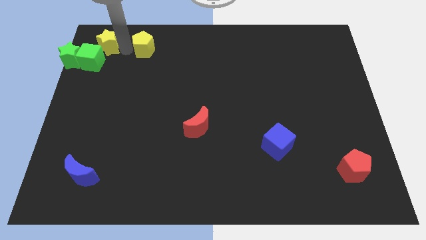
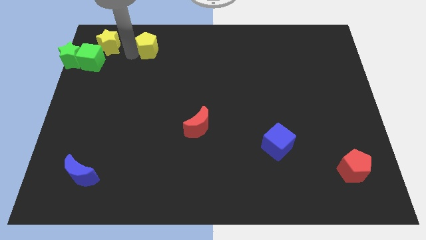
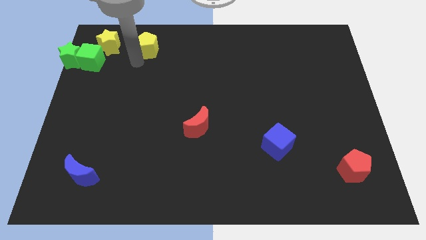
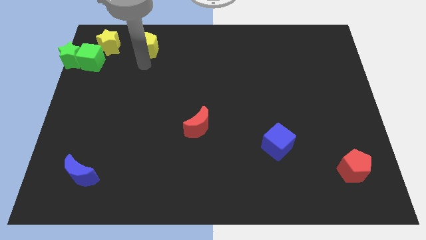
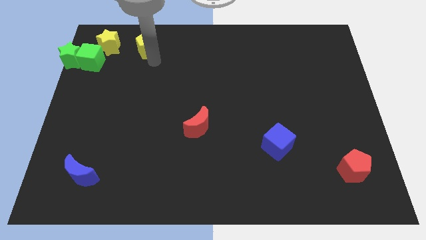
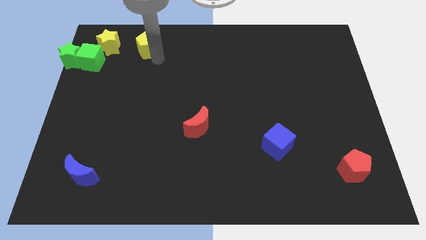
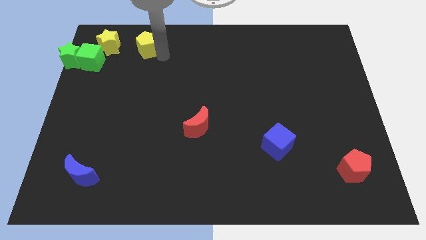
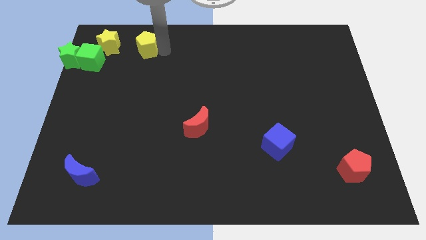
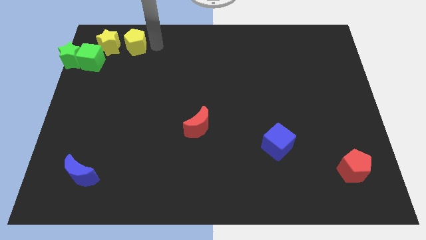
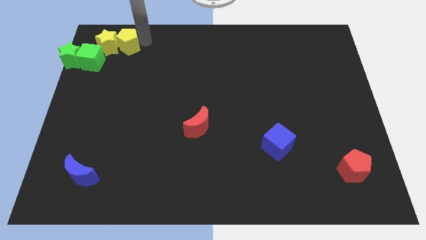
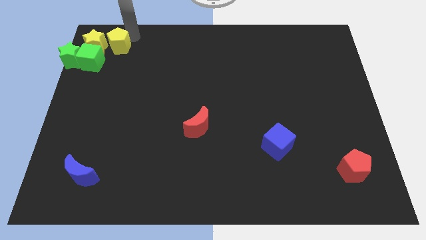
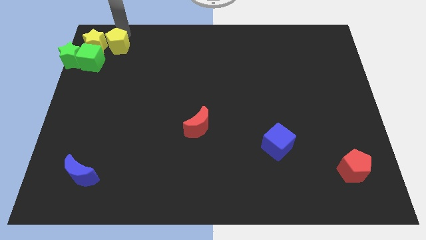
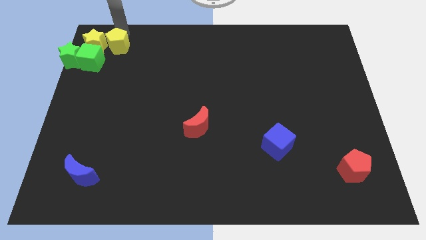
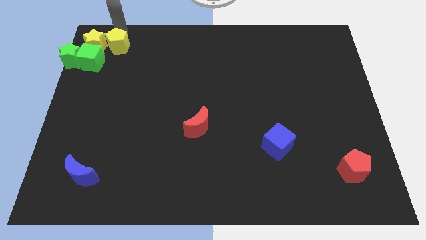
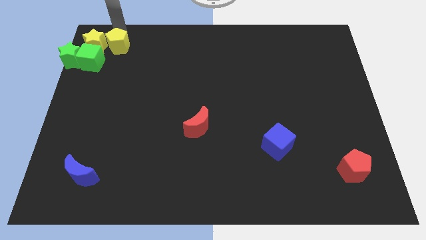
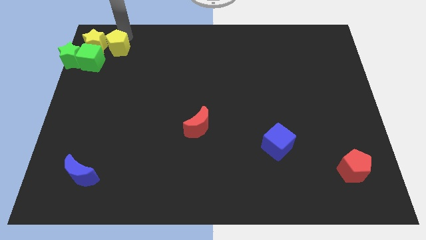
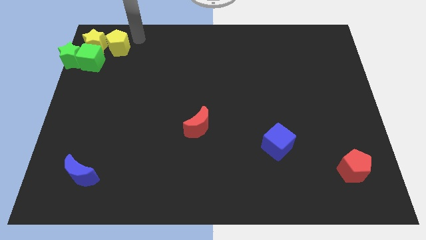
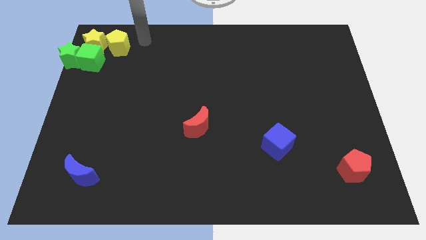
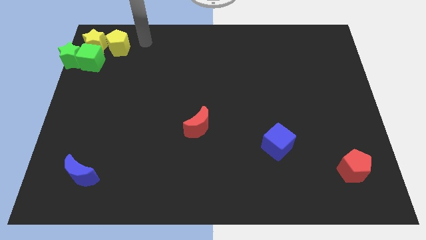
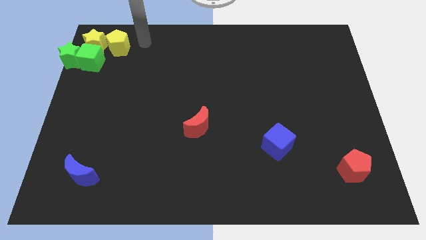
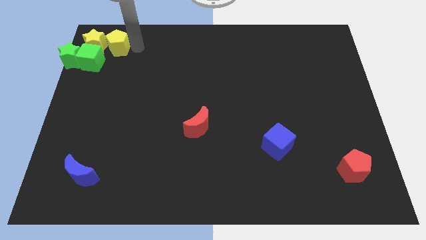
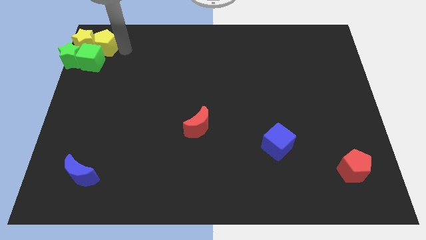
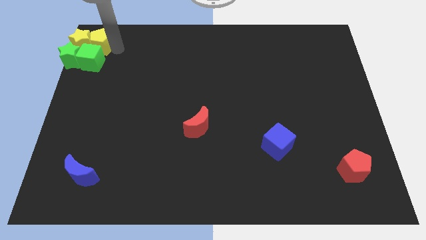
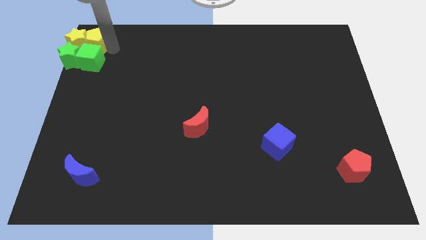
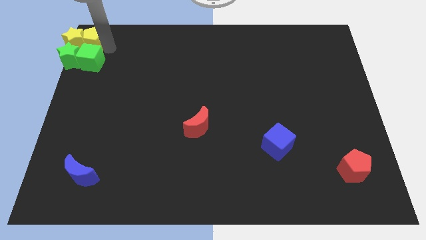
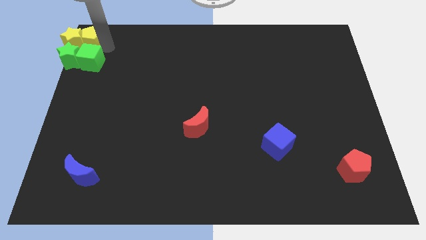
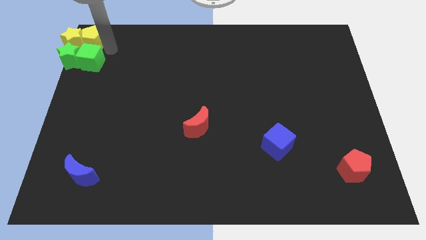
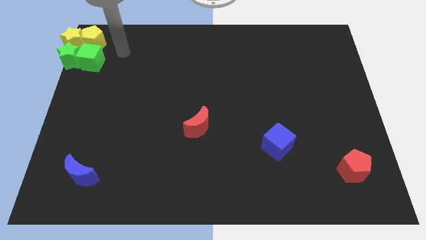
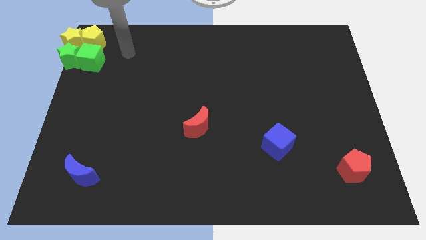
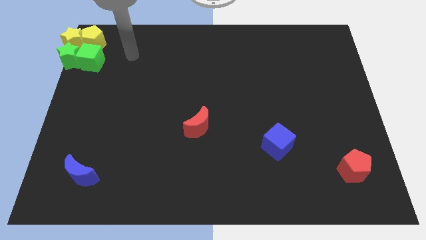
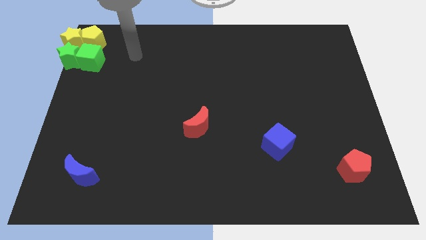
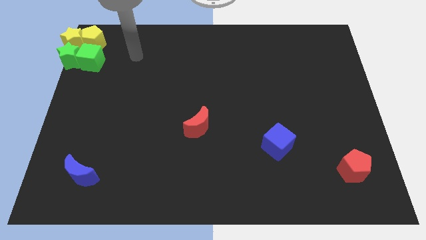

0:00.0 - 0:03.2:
slide the yellow pentagon into the yellow star

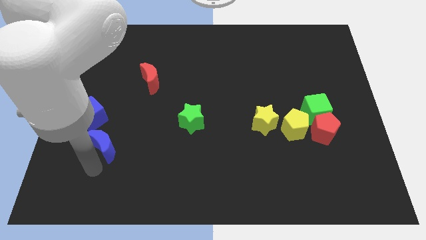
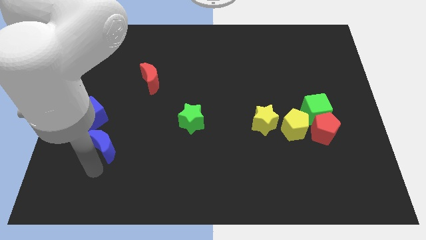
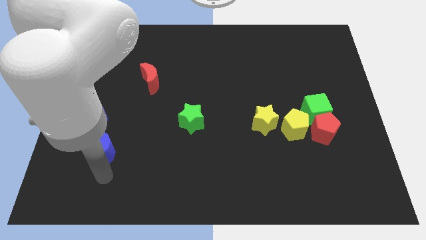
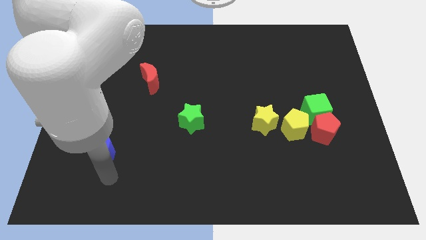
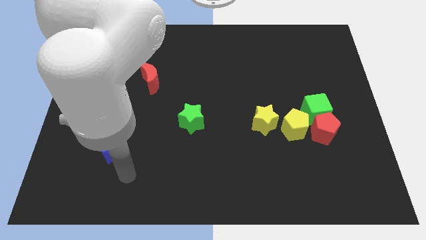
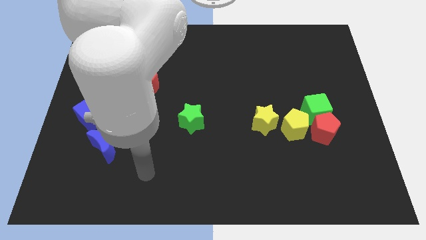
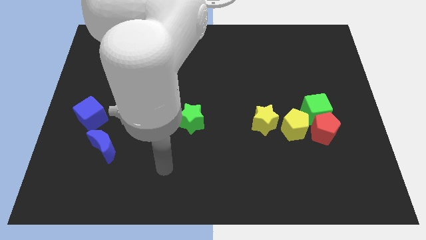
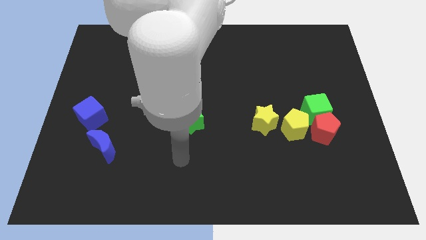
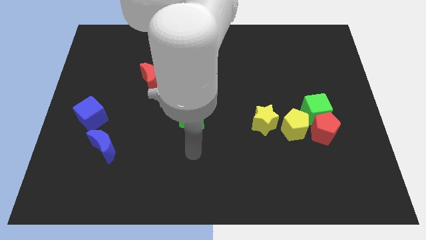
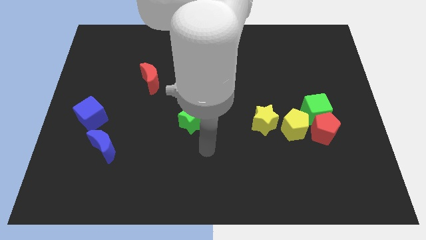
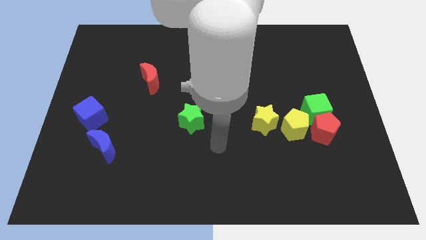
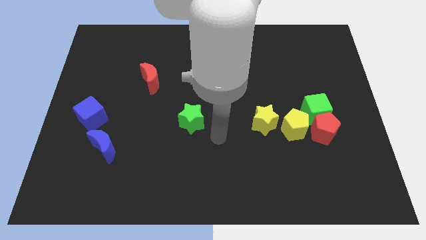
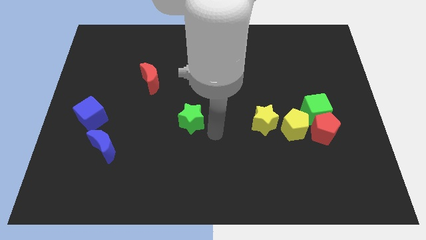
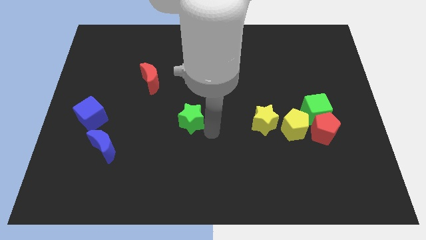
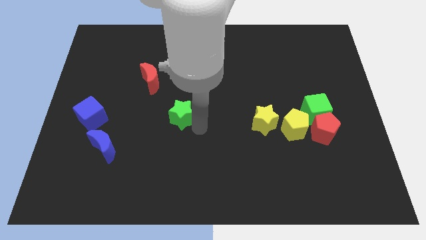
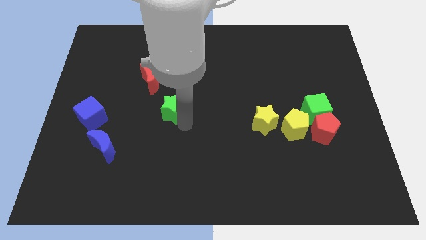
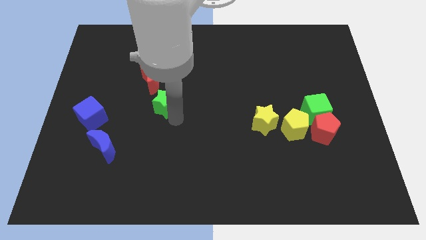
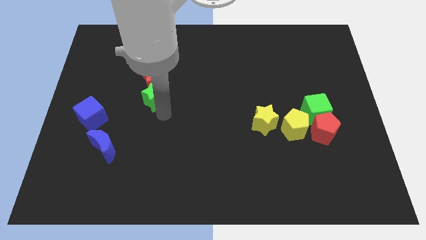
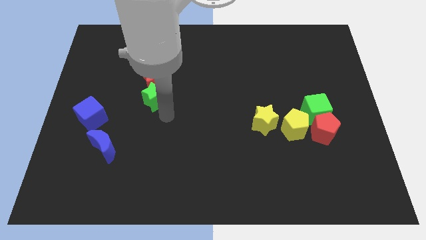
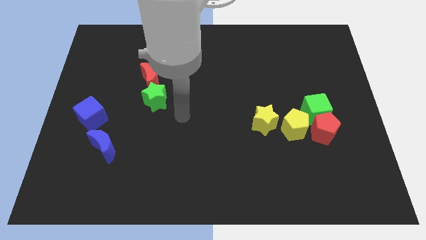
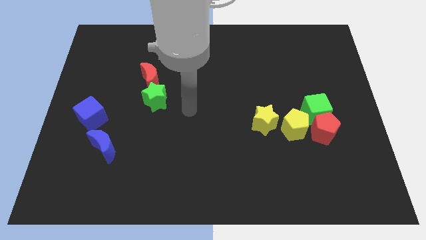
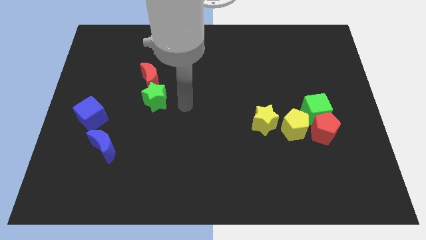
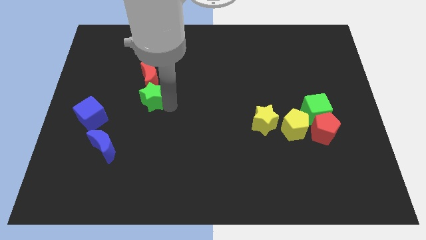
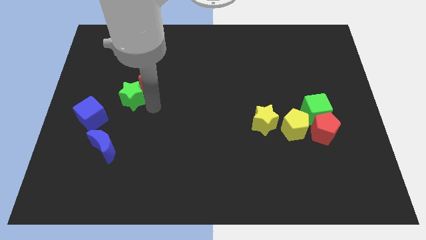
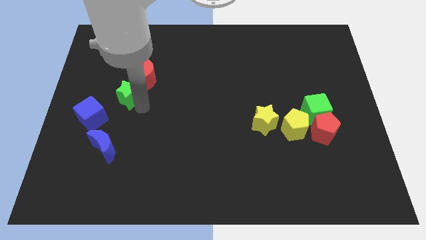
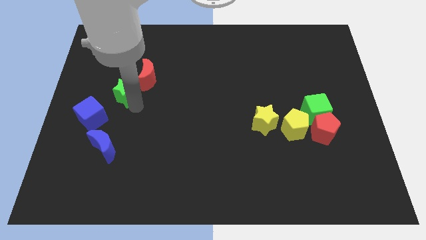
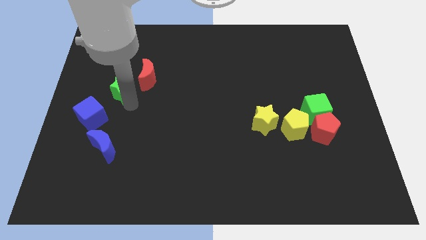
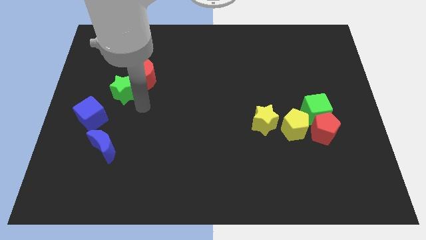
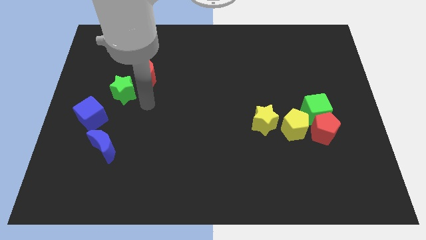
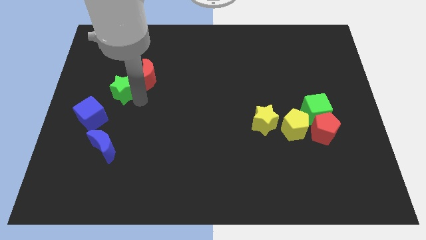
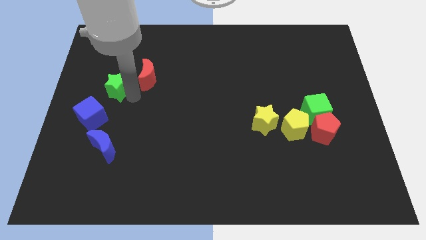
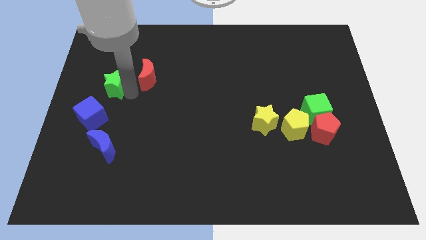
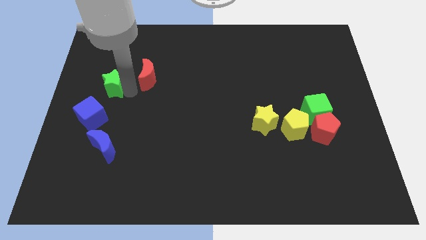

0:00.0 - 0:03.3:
push the green star to the left of red moon

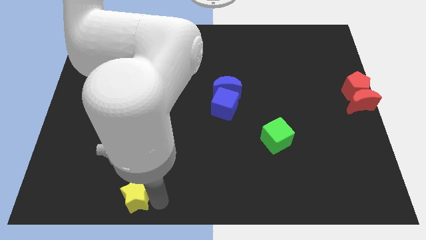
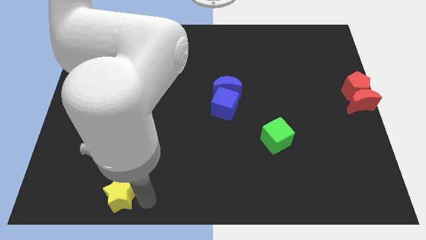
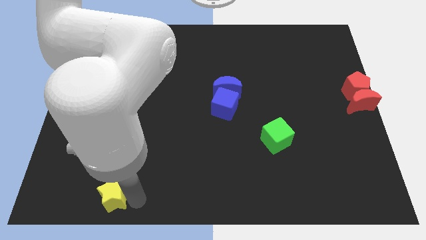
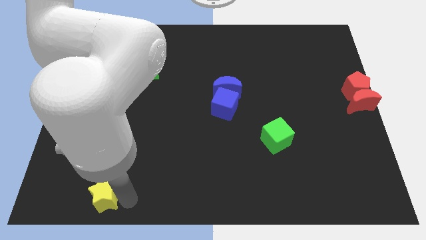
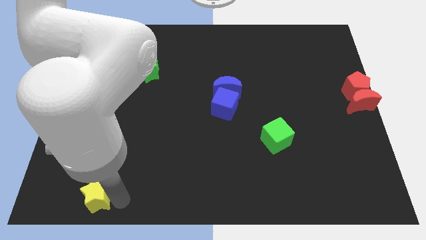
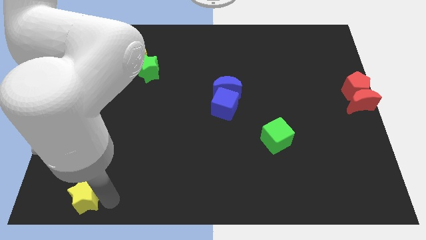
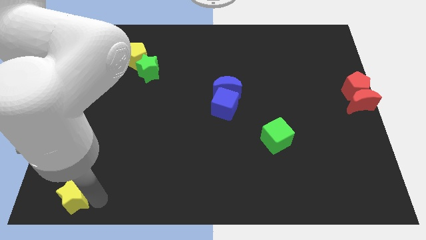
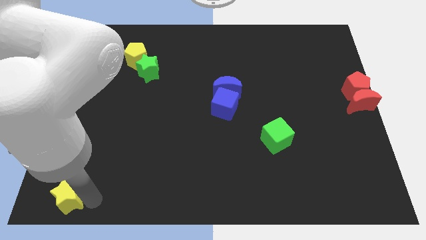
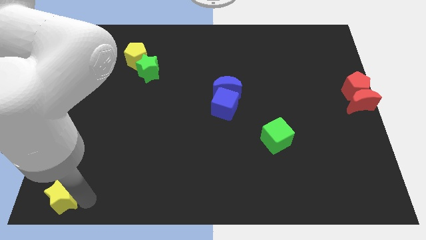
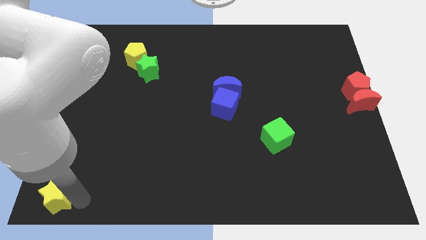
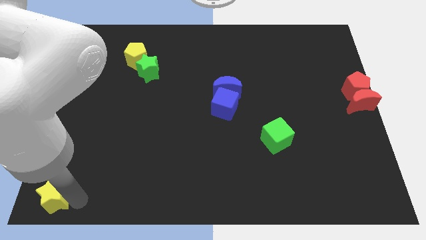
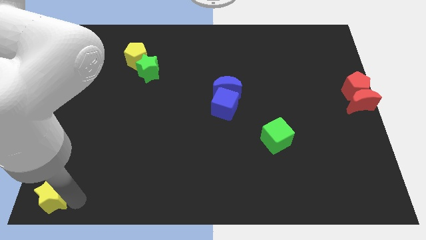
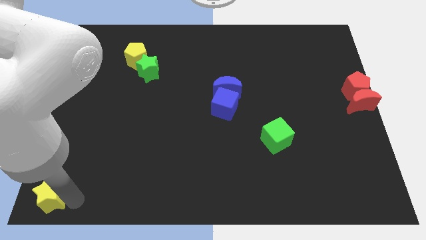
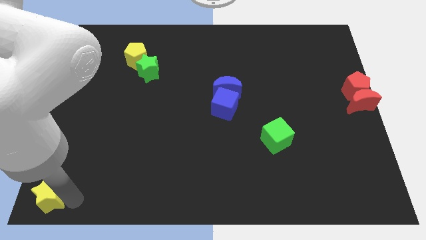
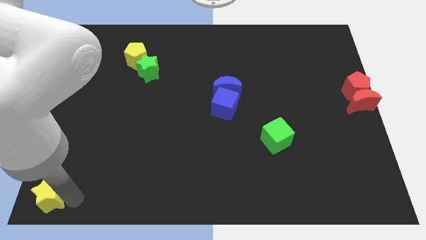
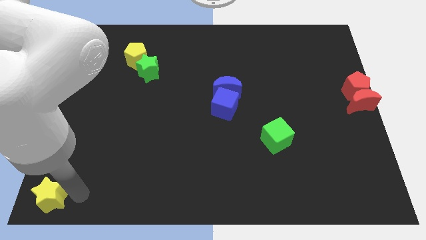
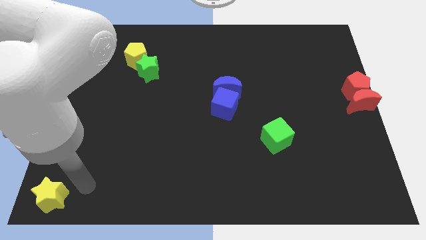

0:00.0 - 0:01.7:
put the yellow star at the top left corner of the board

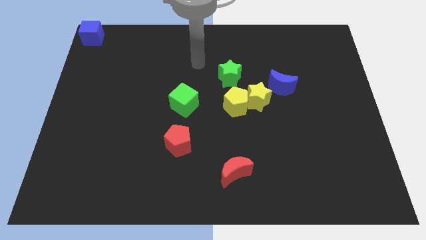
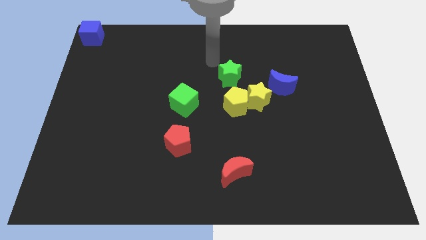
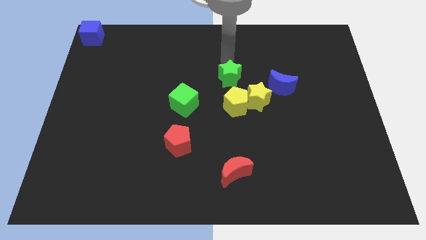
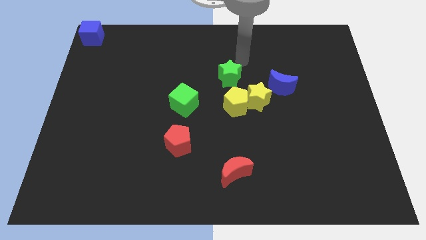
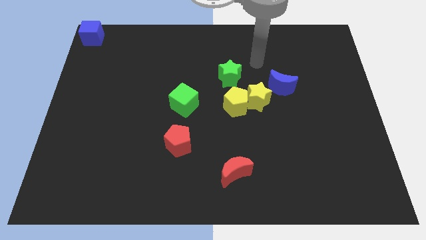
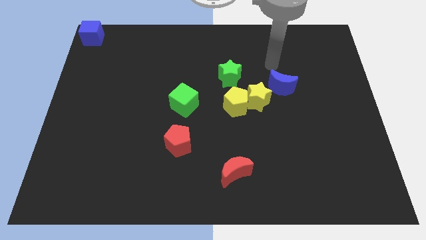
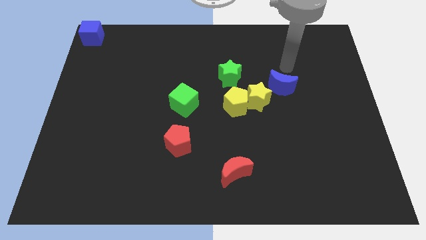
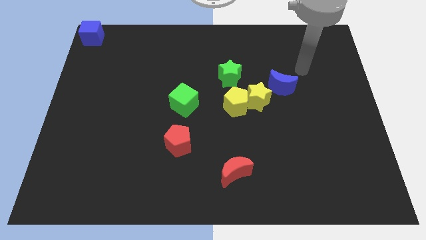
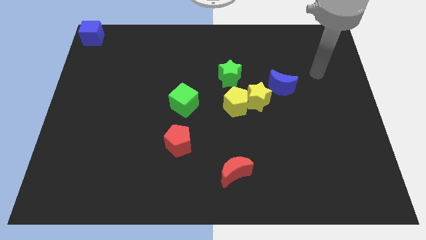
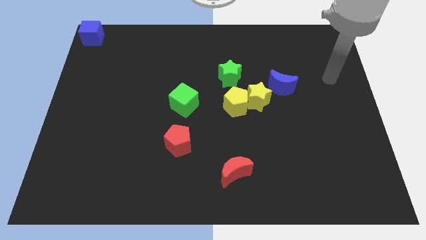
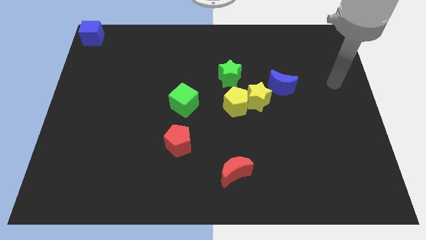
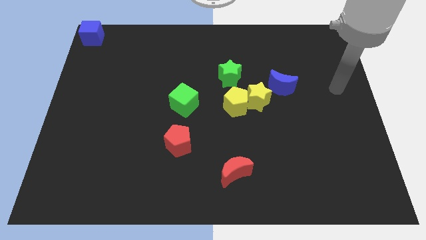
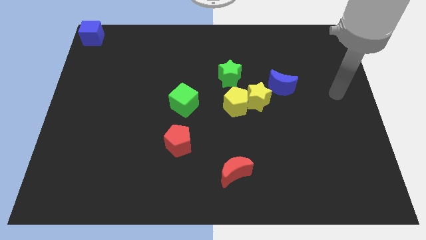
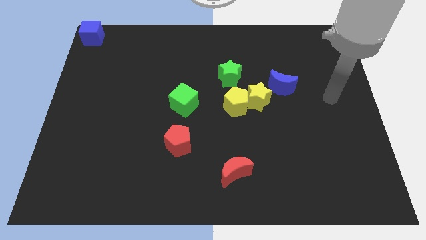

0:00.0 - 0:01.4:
move your arm towards the right side of the board
